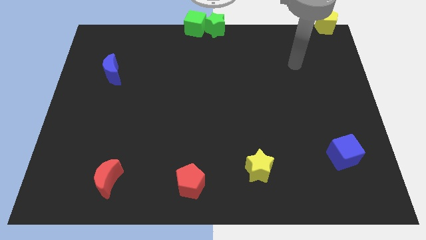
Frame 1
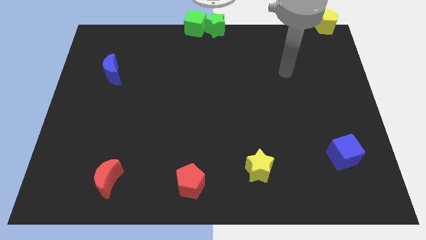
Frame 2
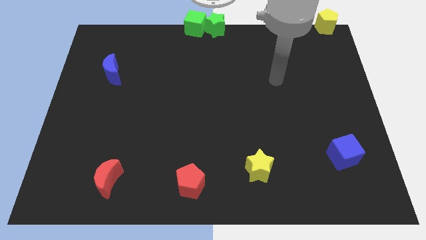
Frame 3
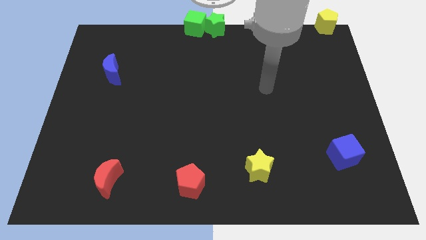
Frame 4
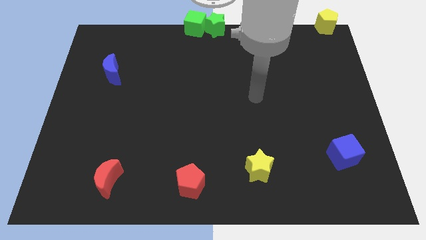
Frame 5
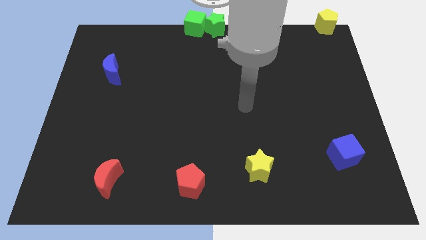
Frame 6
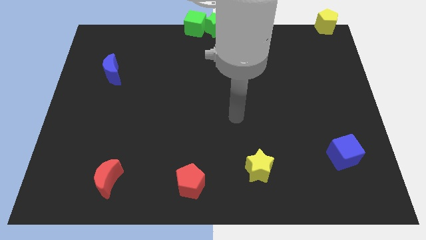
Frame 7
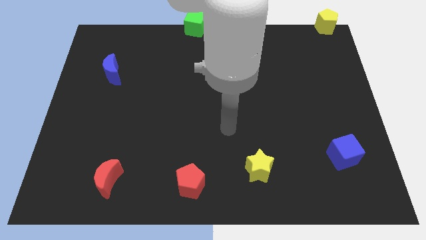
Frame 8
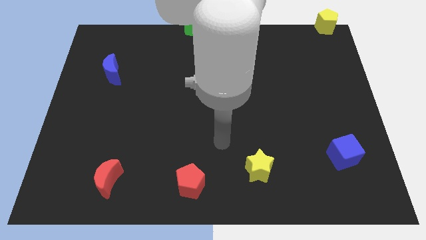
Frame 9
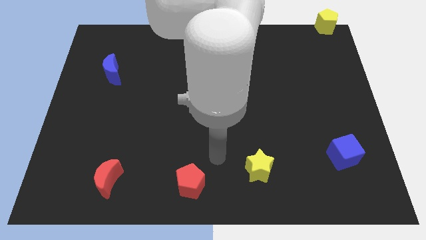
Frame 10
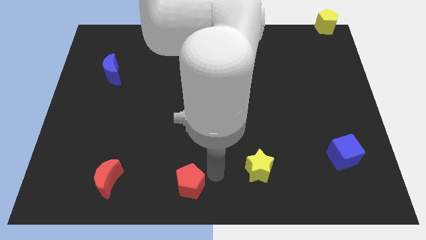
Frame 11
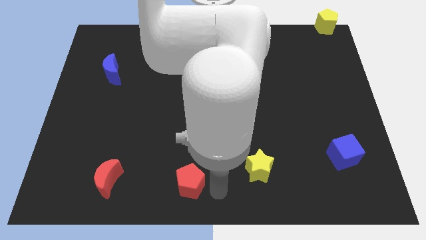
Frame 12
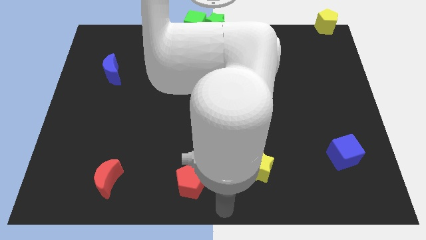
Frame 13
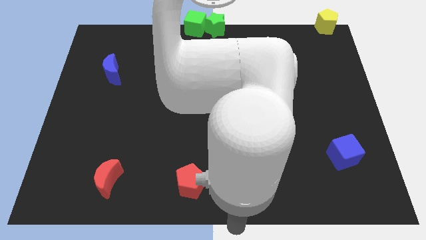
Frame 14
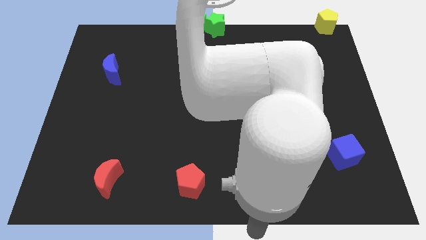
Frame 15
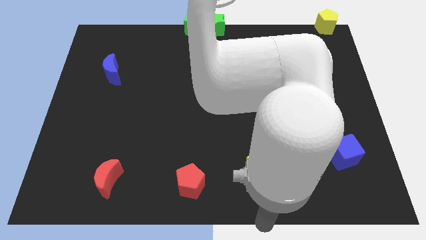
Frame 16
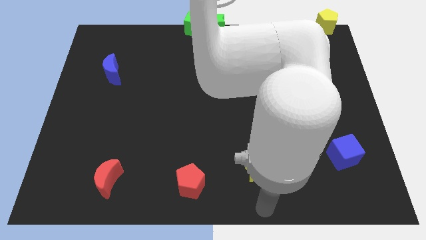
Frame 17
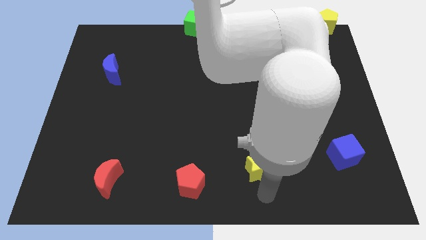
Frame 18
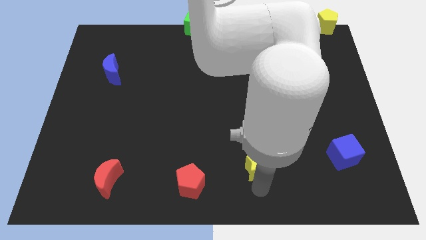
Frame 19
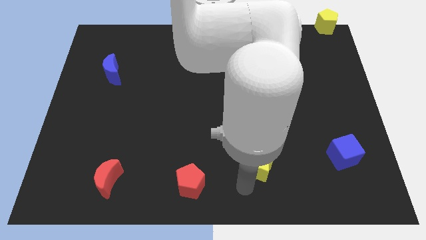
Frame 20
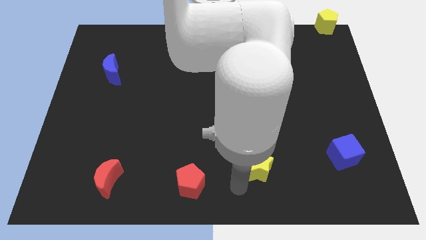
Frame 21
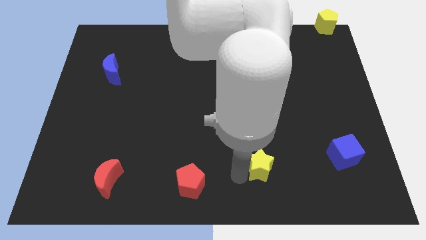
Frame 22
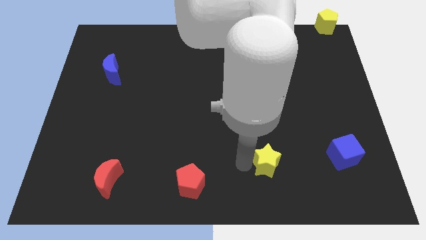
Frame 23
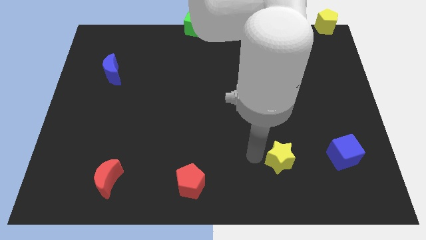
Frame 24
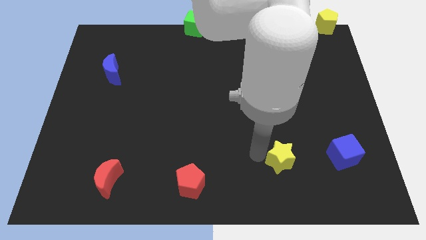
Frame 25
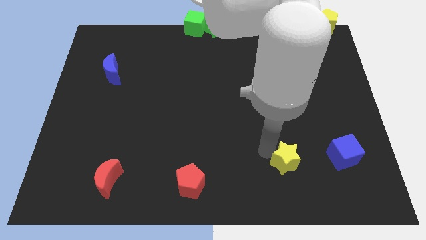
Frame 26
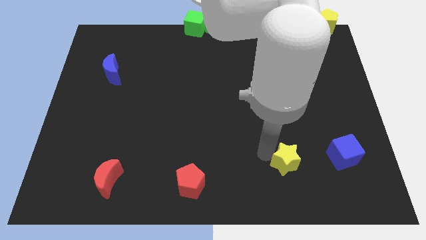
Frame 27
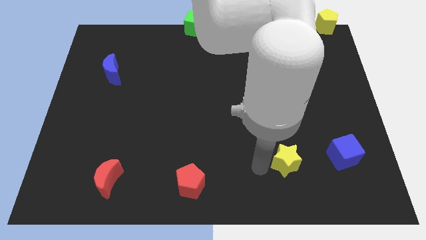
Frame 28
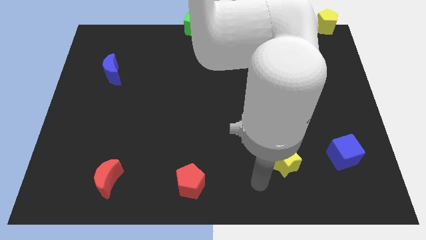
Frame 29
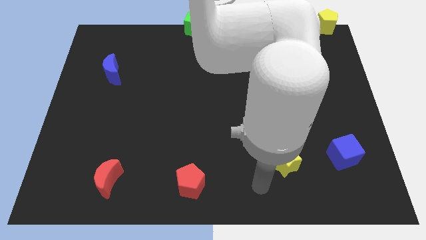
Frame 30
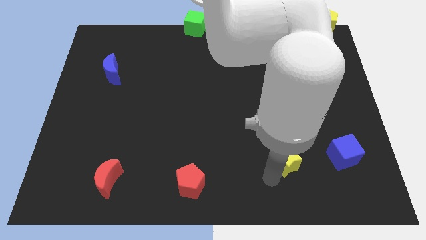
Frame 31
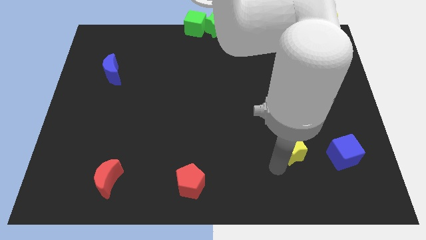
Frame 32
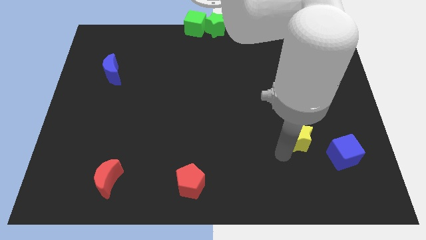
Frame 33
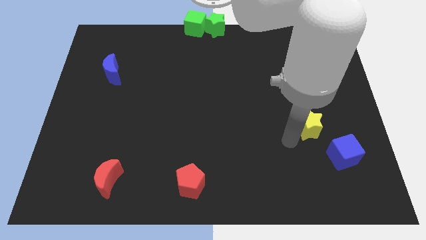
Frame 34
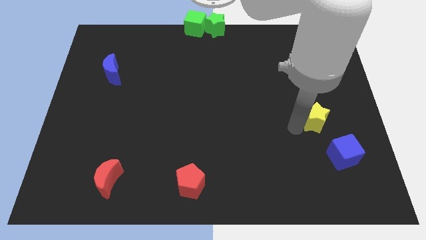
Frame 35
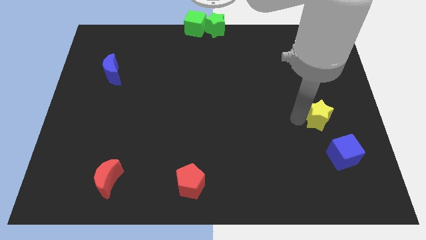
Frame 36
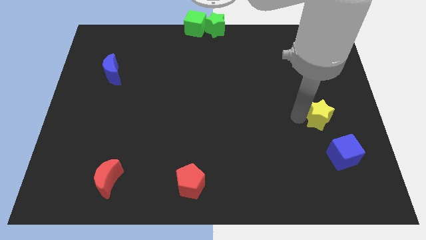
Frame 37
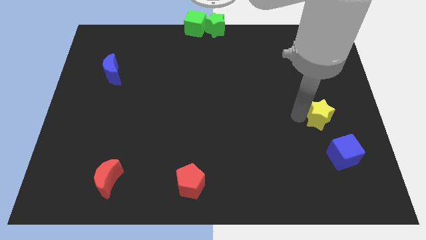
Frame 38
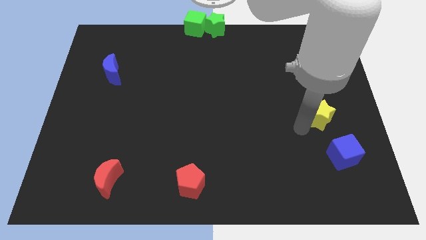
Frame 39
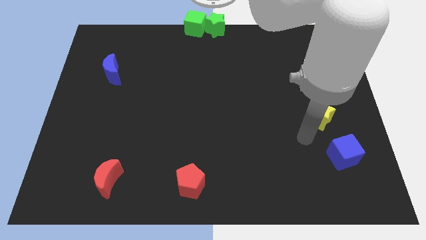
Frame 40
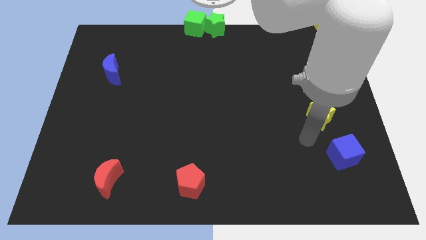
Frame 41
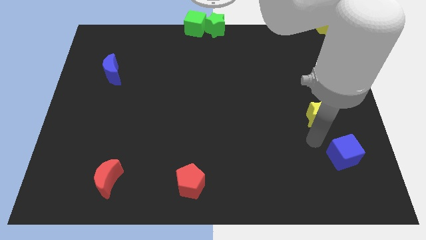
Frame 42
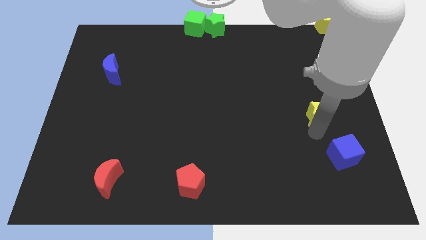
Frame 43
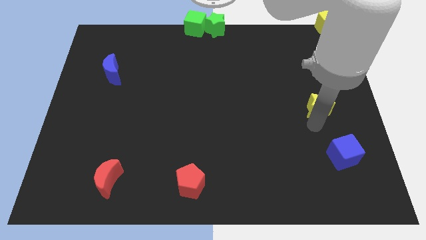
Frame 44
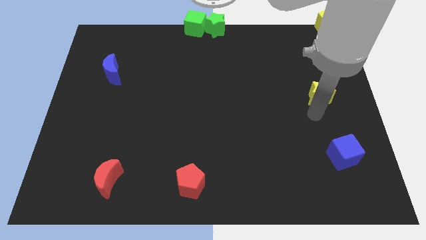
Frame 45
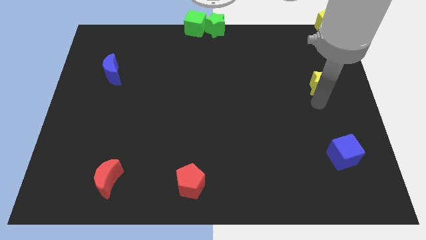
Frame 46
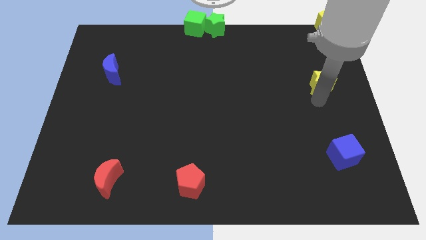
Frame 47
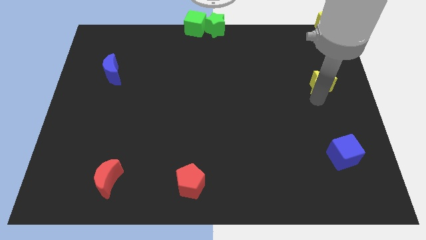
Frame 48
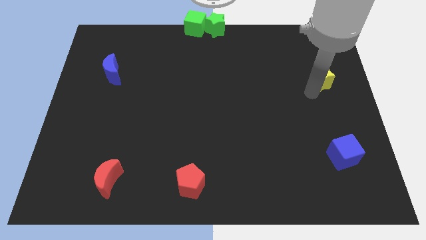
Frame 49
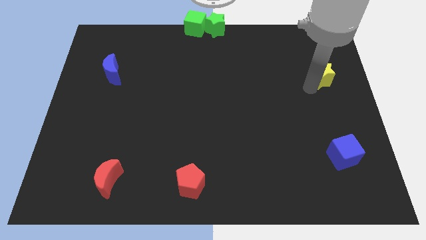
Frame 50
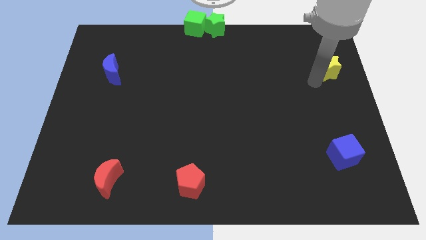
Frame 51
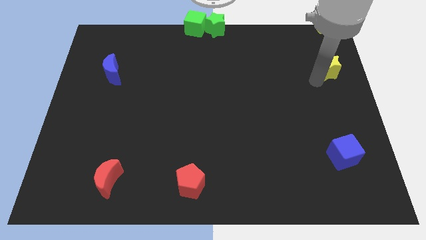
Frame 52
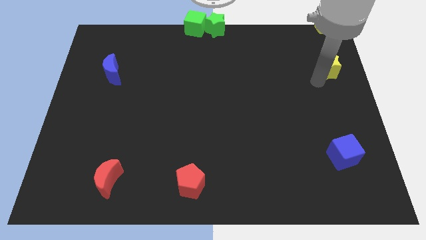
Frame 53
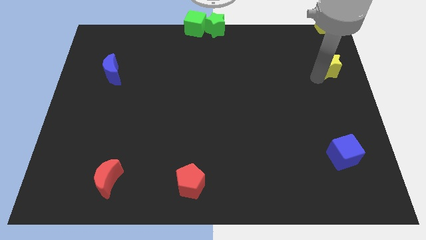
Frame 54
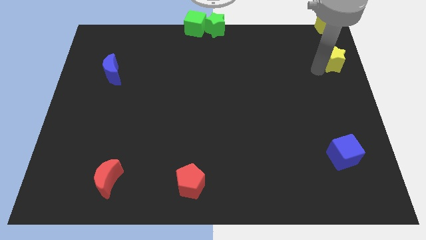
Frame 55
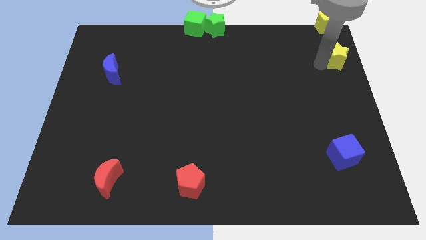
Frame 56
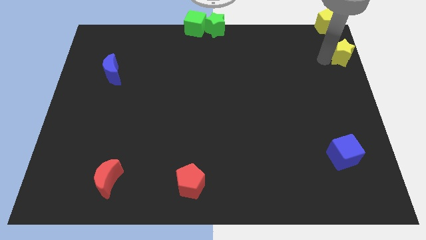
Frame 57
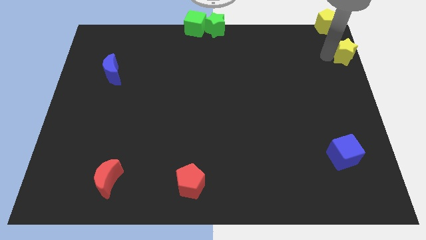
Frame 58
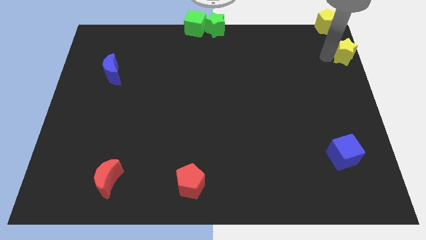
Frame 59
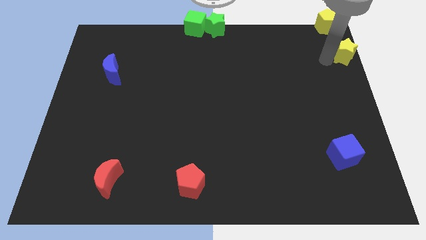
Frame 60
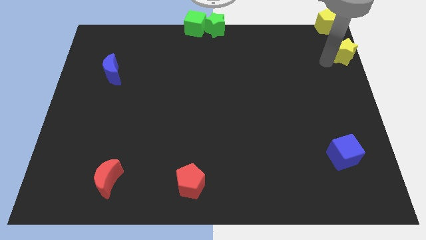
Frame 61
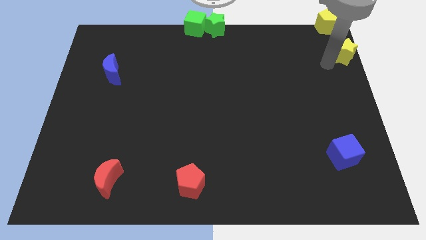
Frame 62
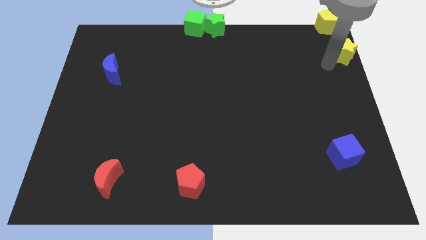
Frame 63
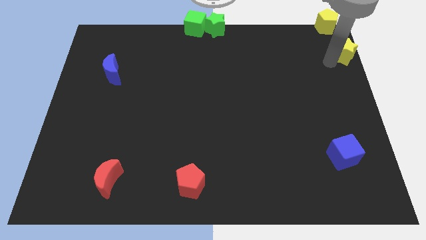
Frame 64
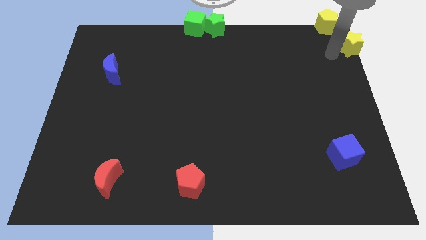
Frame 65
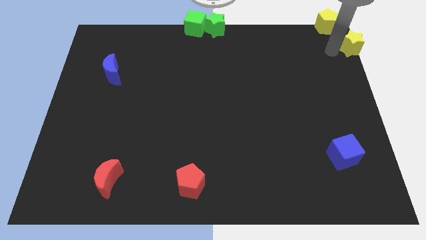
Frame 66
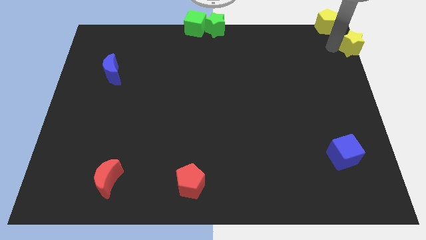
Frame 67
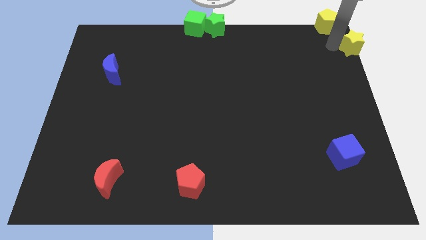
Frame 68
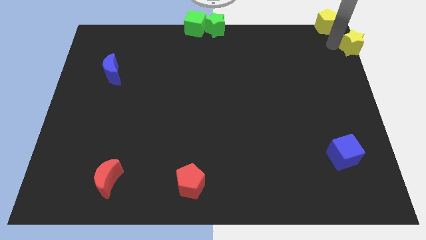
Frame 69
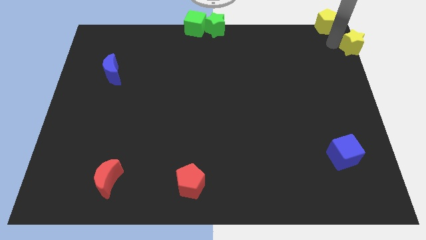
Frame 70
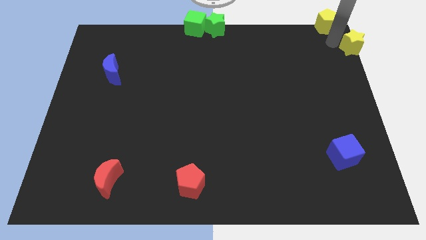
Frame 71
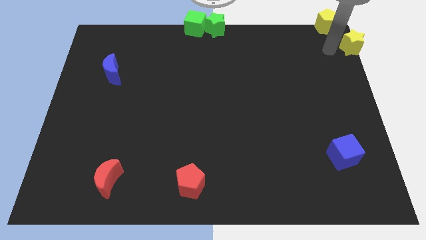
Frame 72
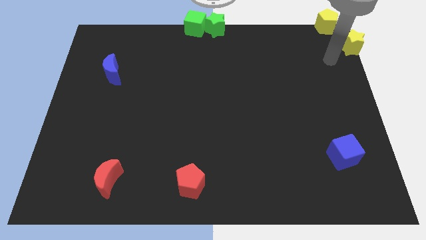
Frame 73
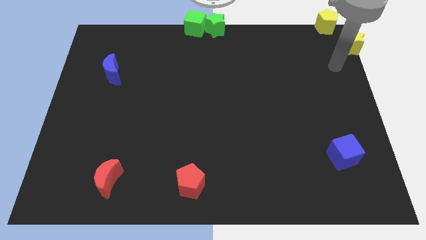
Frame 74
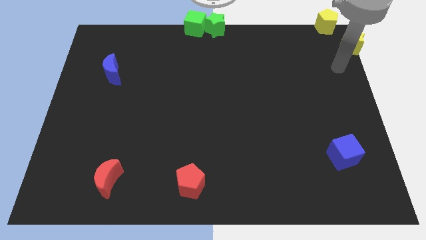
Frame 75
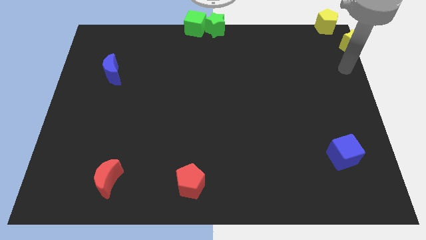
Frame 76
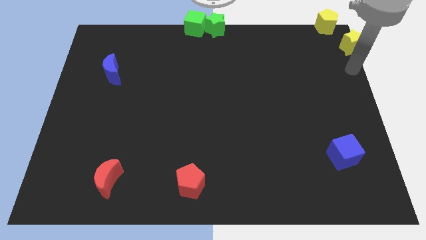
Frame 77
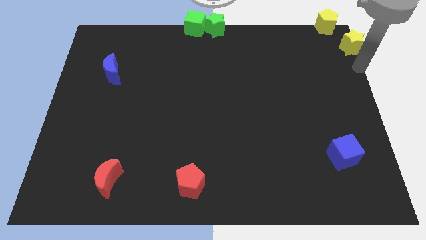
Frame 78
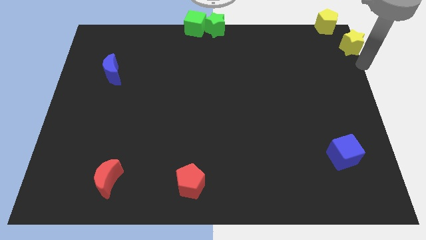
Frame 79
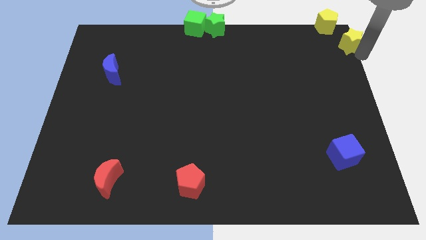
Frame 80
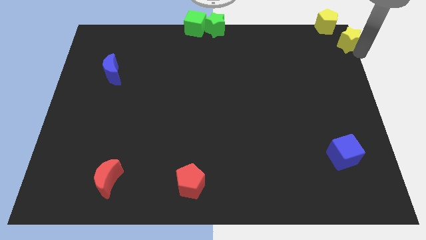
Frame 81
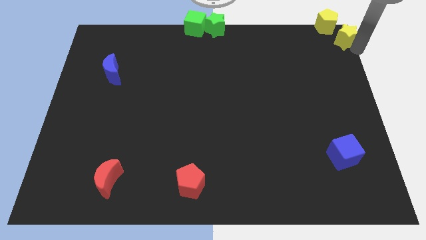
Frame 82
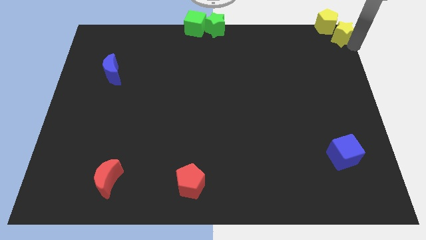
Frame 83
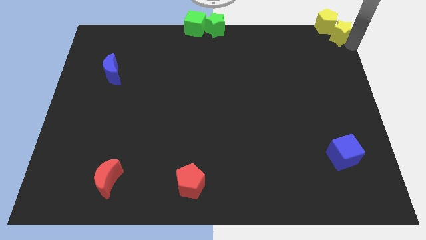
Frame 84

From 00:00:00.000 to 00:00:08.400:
move the yellow star to the bottom right of the yellow pentagon

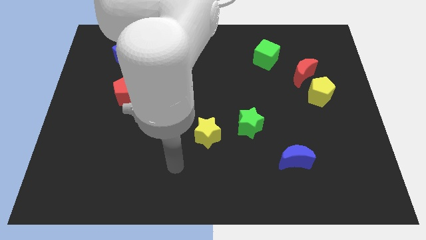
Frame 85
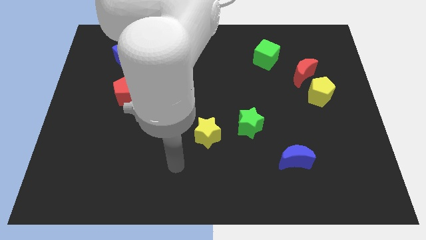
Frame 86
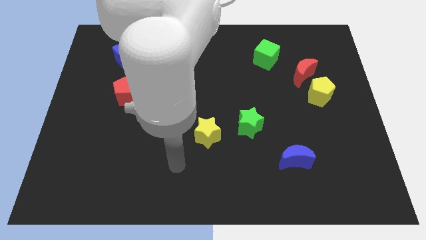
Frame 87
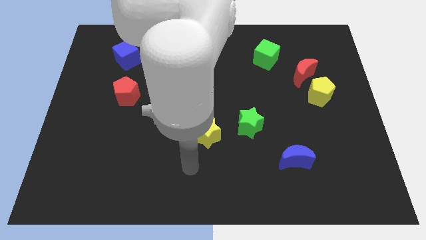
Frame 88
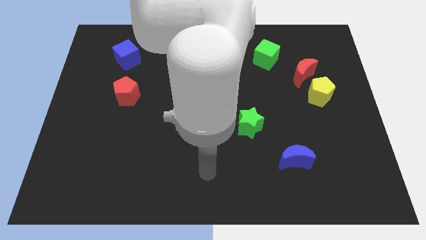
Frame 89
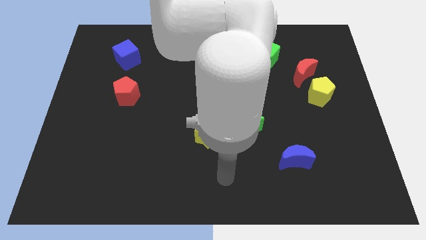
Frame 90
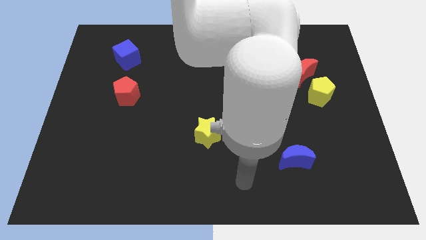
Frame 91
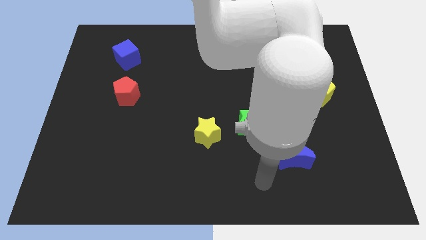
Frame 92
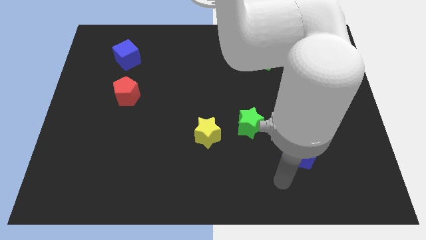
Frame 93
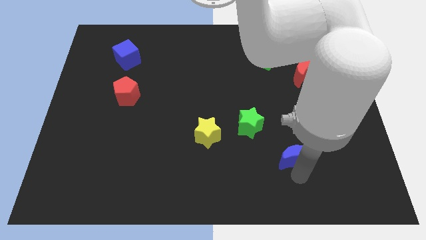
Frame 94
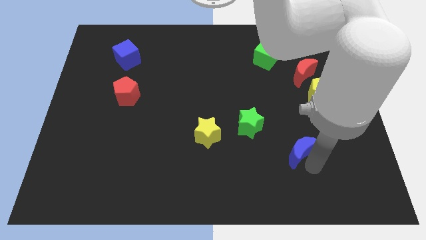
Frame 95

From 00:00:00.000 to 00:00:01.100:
tap at the bottom of the blue moon
